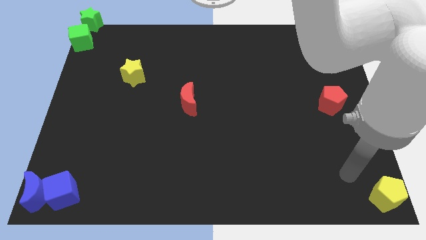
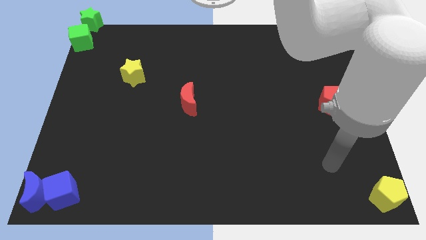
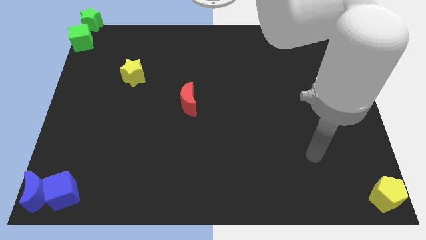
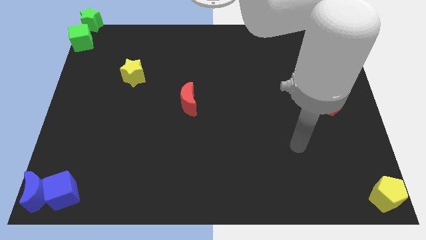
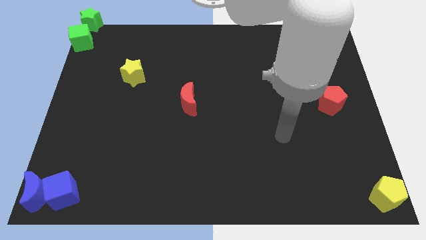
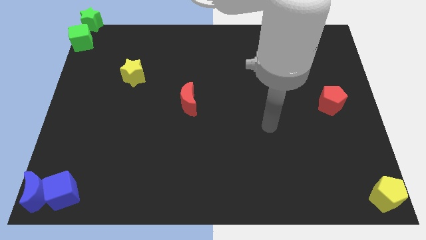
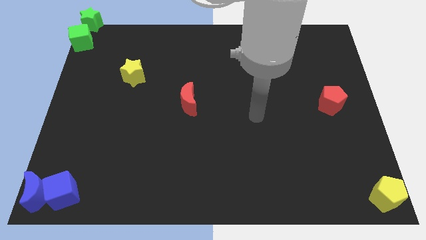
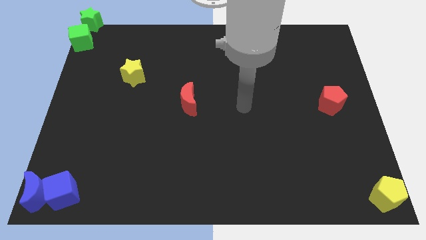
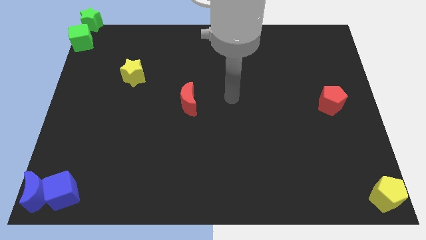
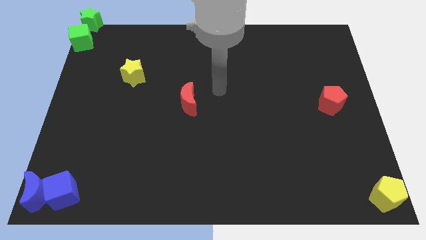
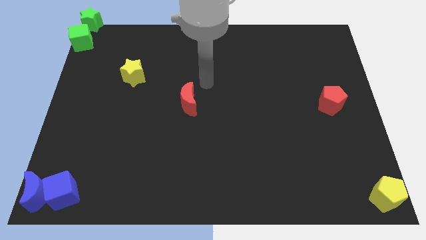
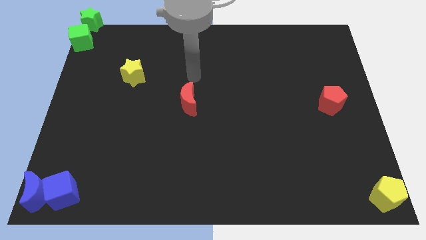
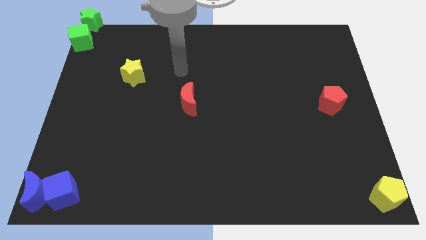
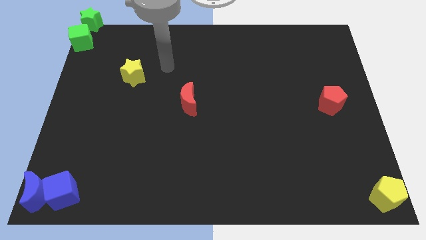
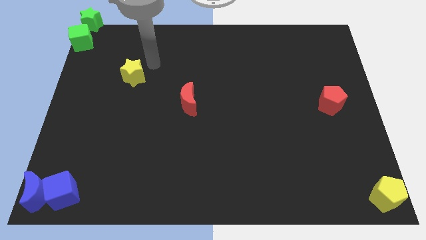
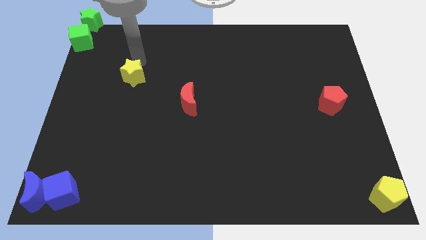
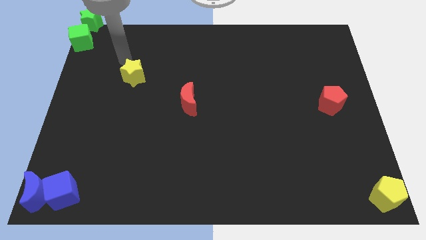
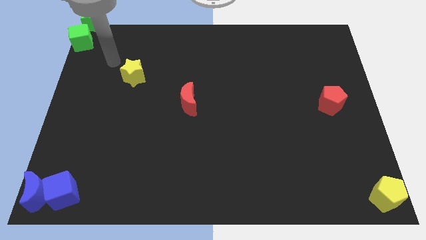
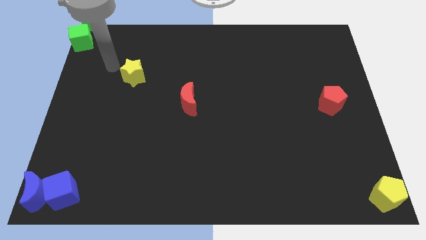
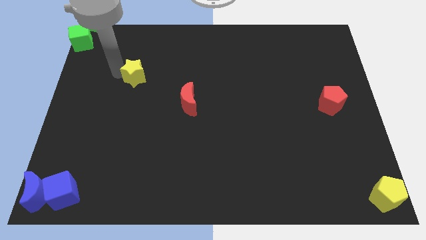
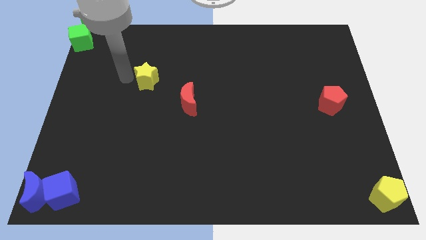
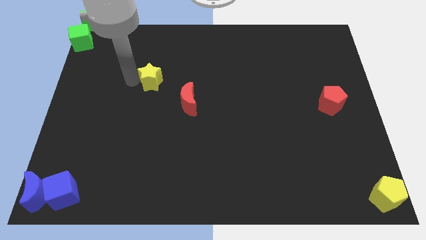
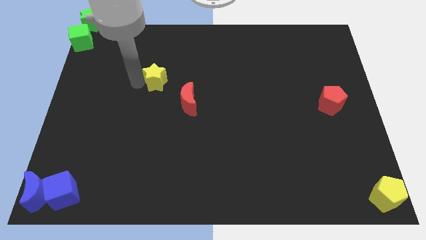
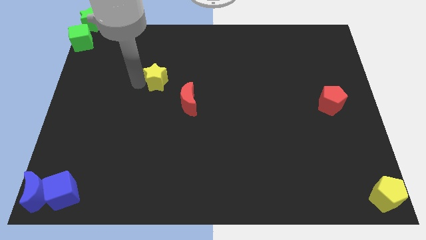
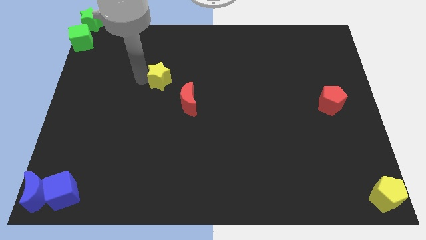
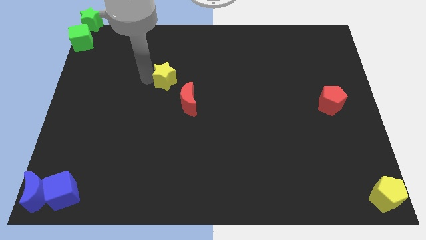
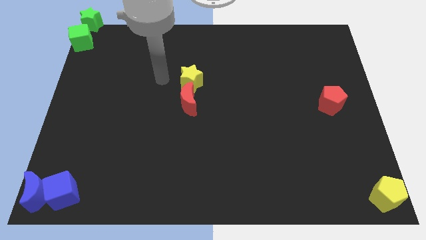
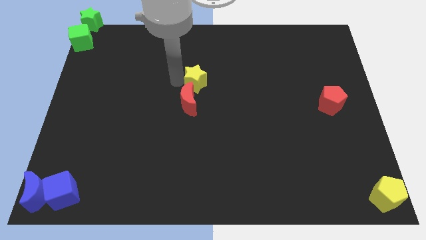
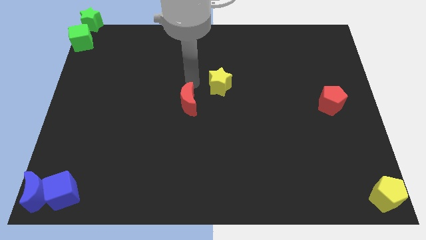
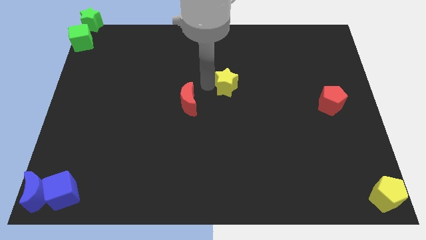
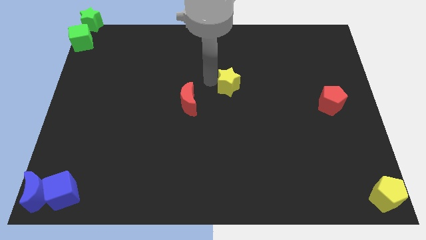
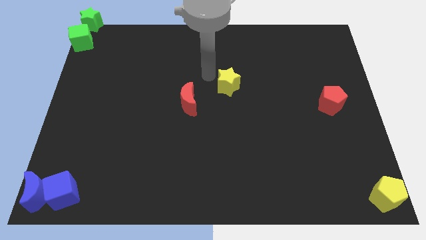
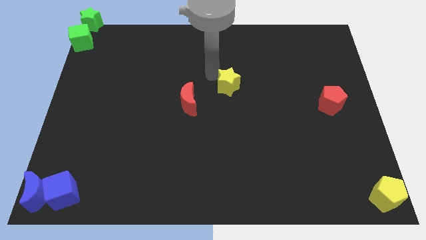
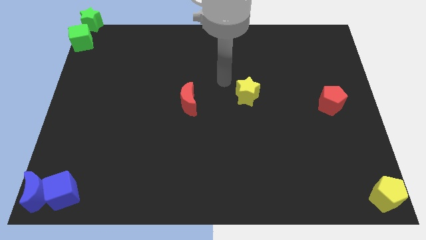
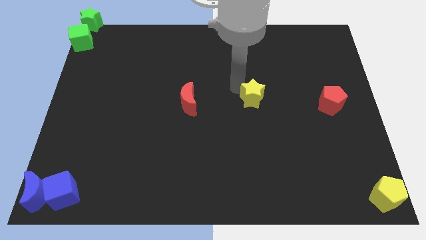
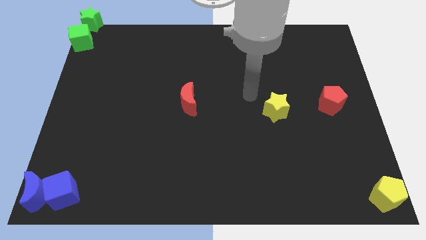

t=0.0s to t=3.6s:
place the yellow star in between the red blocks

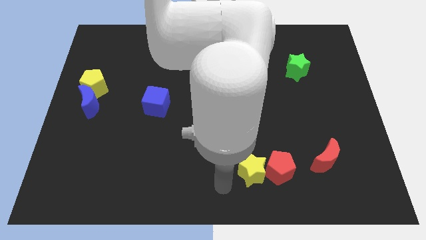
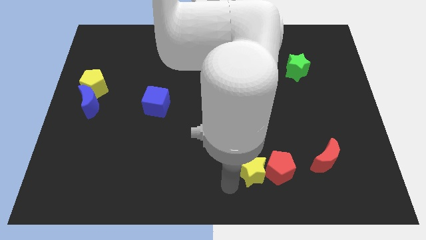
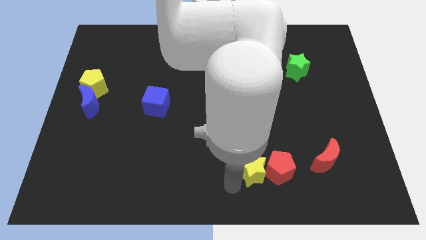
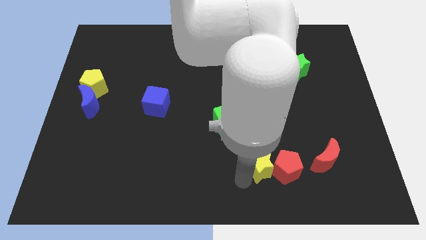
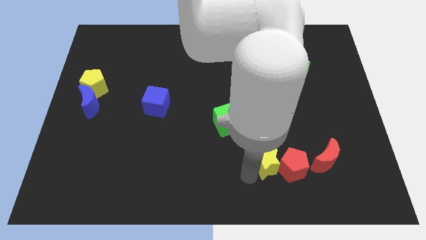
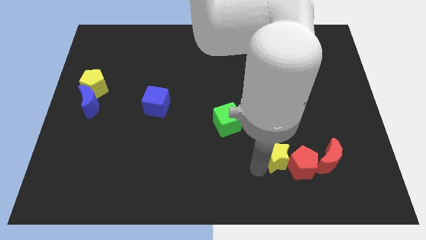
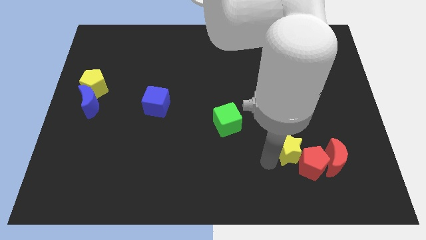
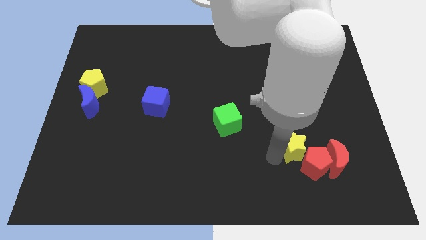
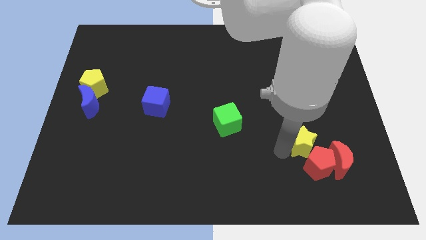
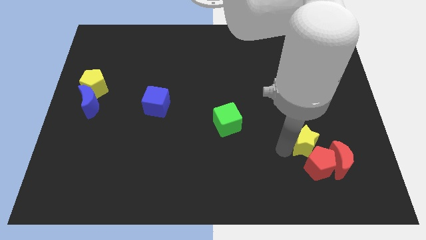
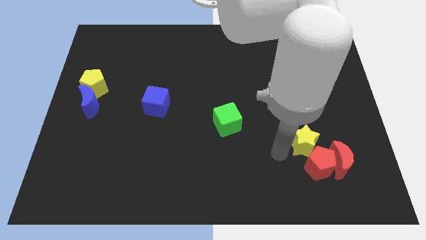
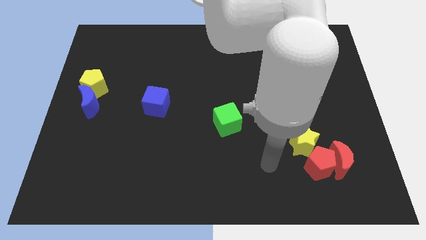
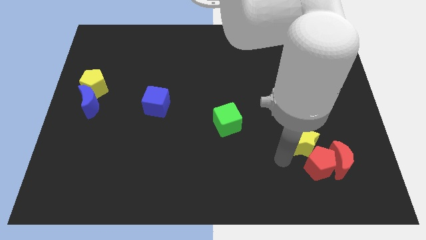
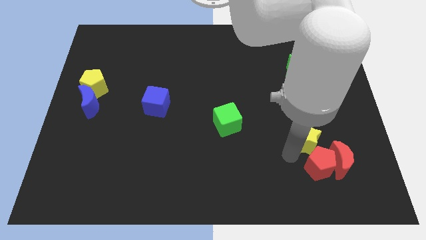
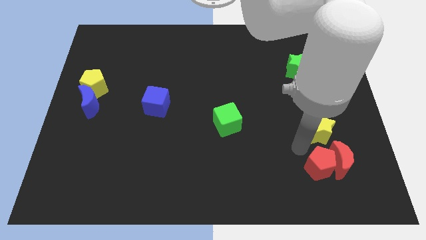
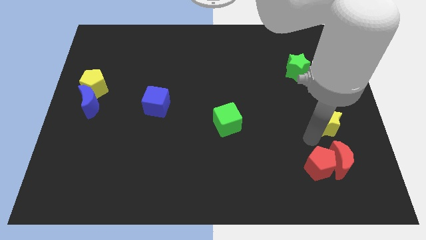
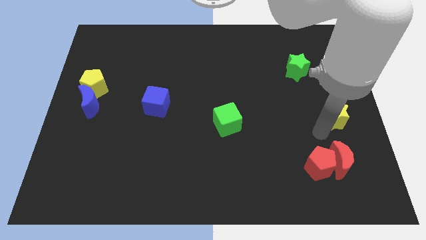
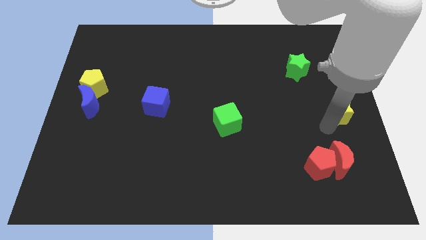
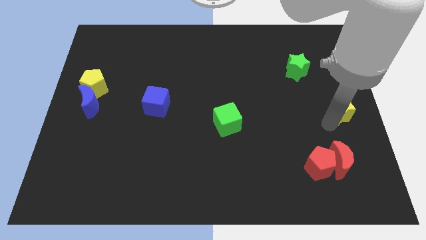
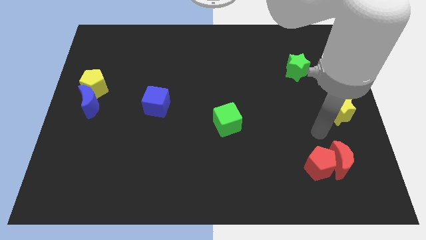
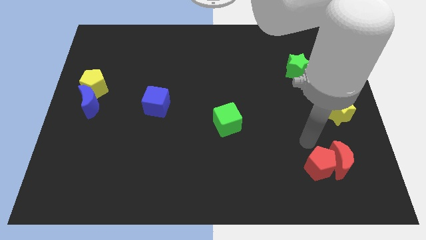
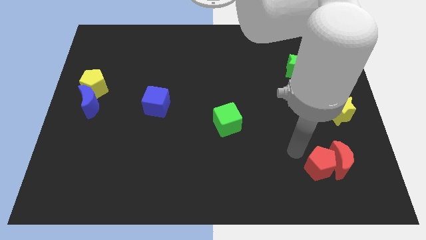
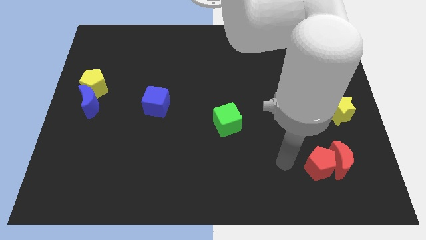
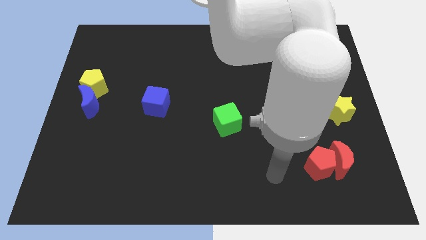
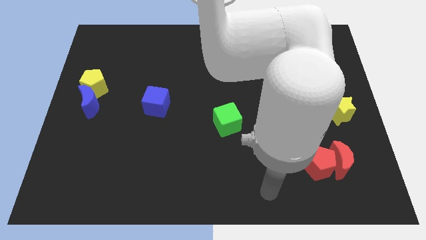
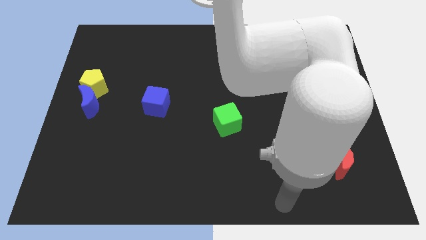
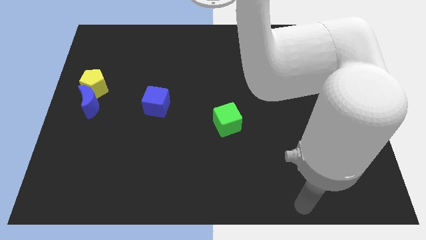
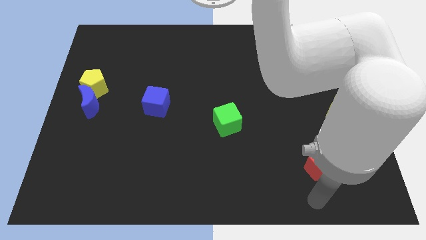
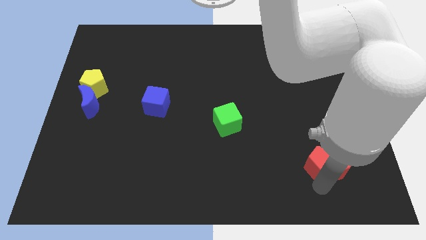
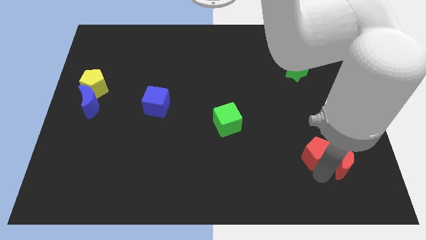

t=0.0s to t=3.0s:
move the red pentagon into the red moon

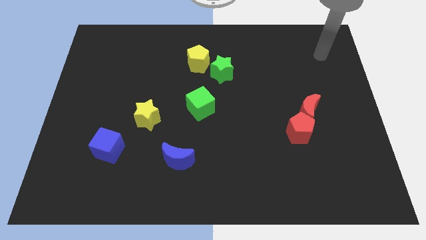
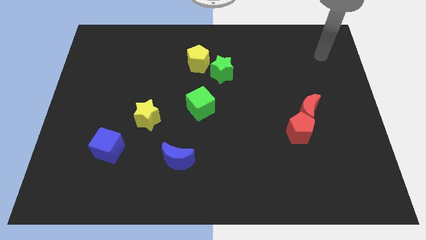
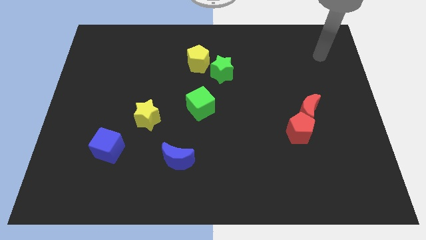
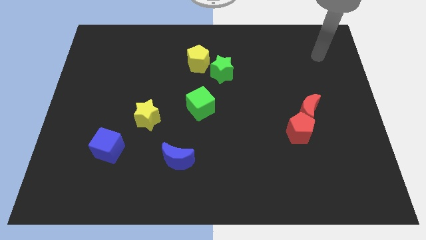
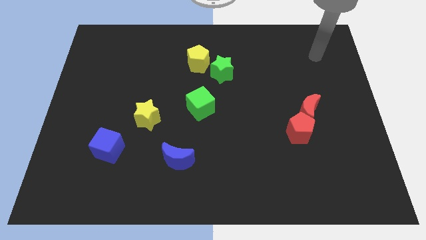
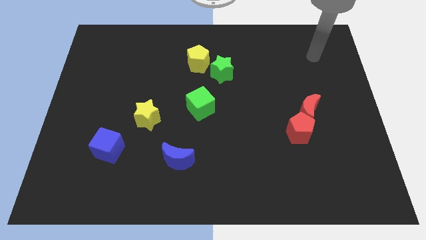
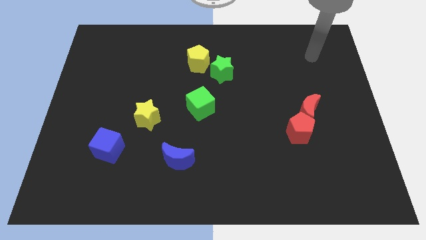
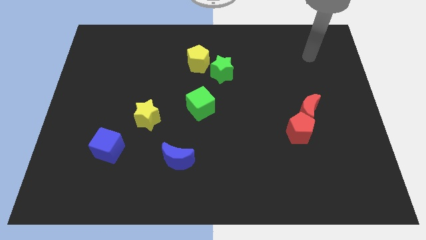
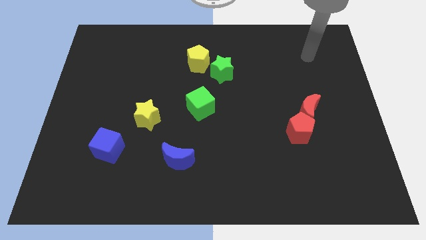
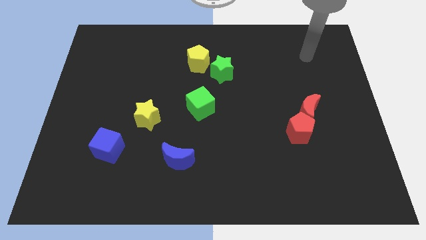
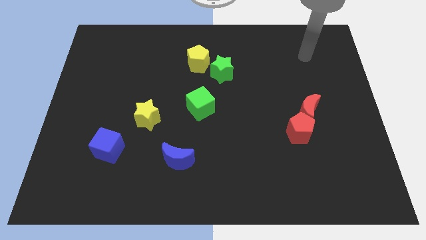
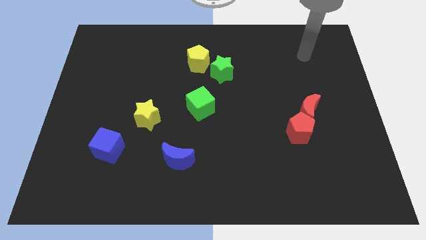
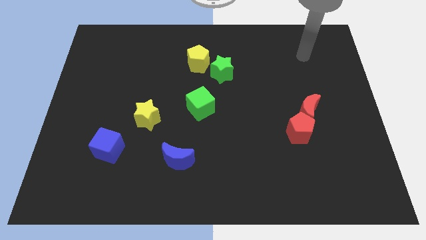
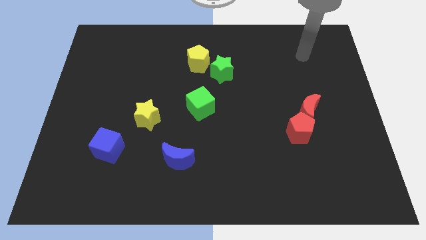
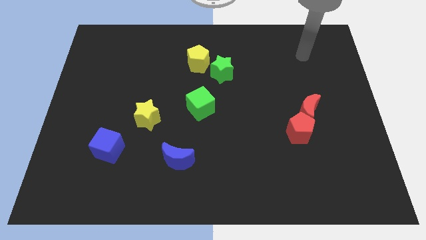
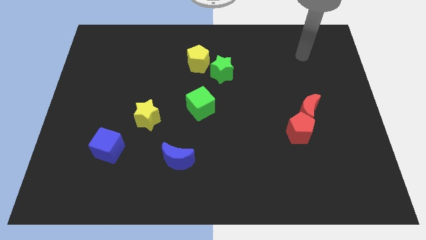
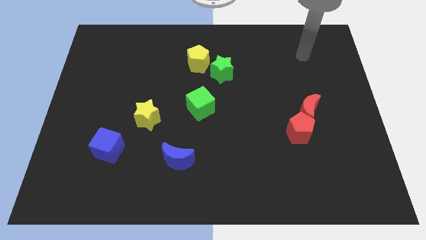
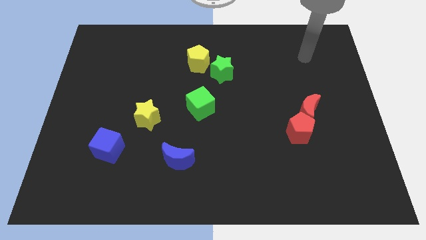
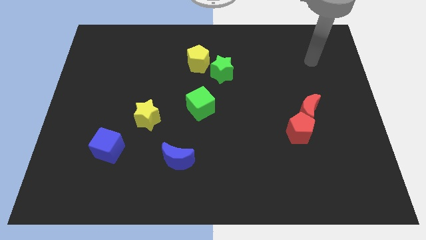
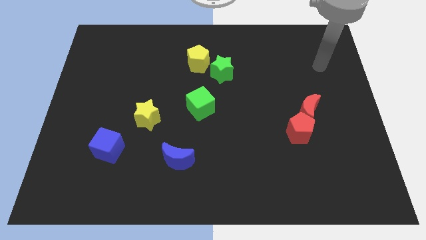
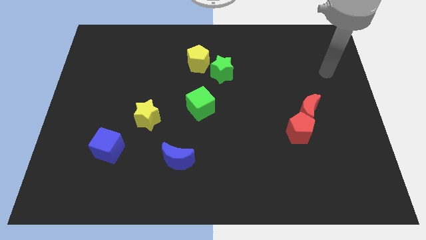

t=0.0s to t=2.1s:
move your arm towards the red blocks

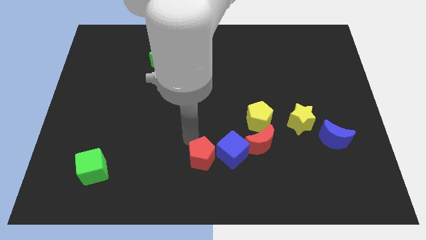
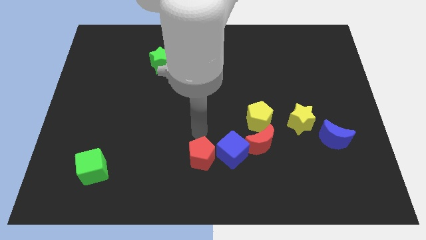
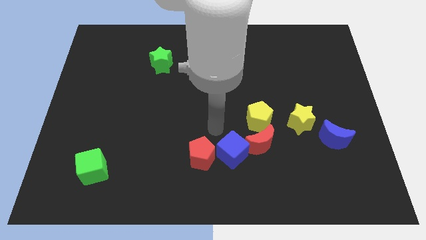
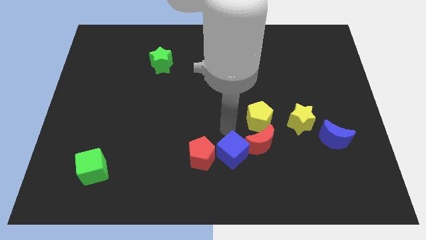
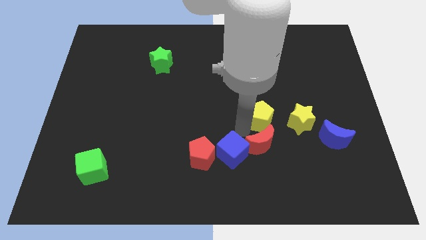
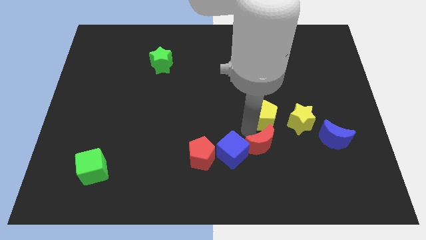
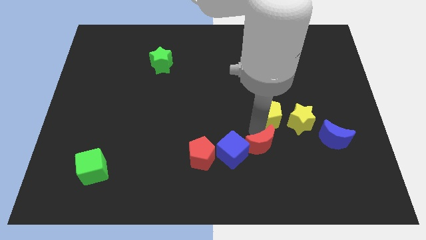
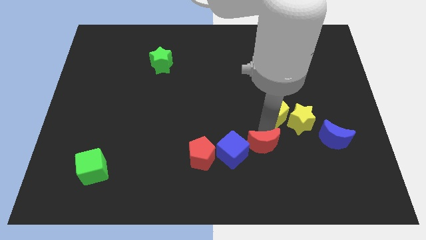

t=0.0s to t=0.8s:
move your arm away from red pentagon
